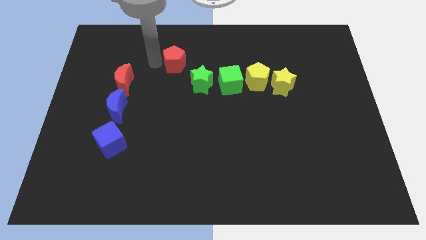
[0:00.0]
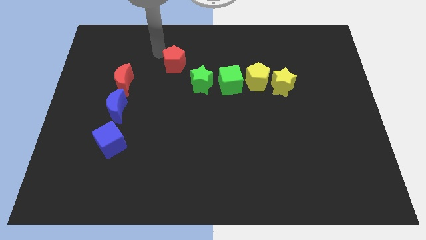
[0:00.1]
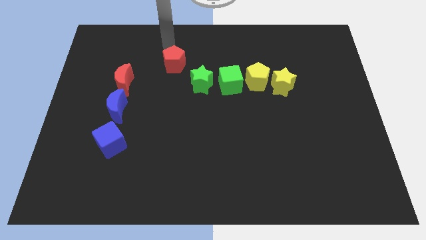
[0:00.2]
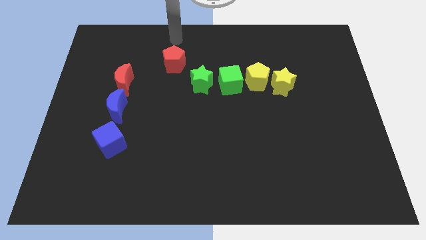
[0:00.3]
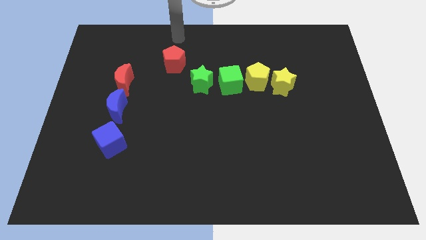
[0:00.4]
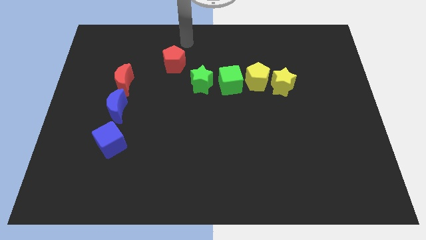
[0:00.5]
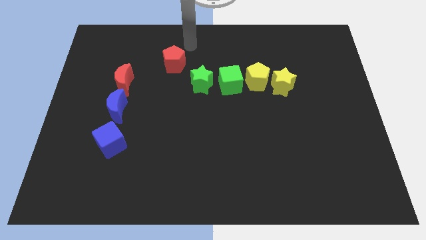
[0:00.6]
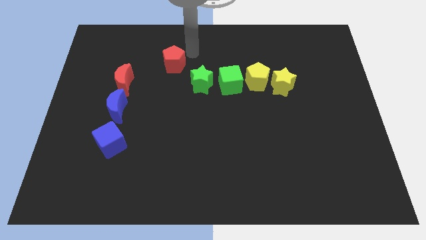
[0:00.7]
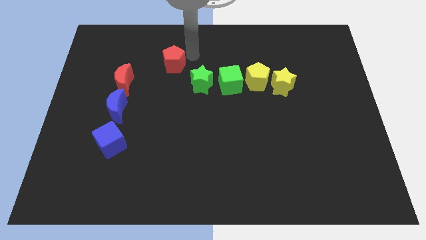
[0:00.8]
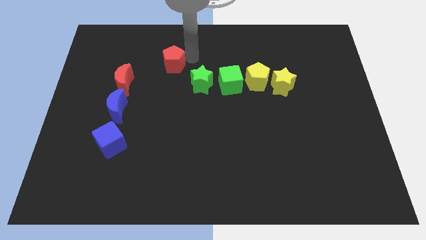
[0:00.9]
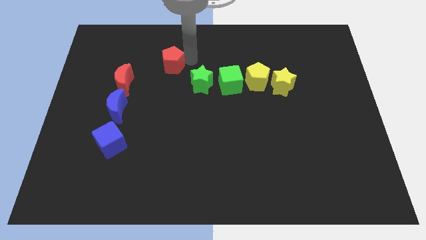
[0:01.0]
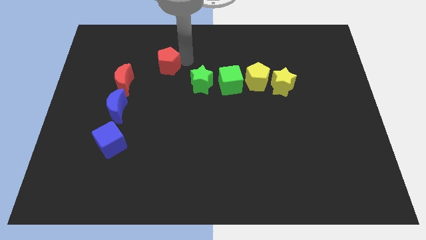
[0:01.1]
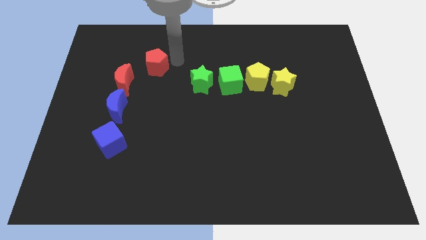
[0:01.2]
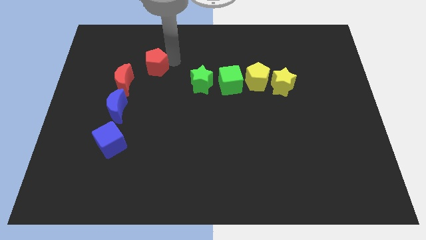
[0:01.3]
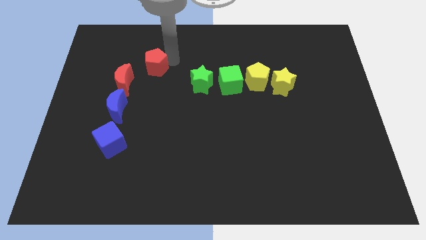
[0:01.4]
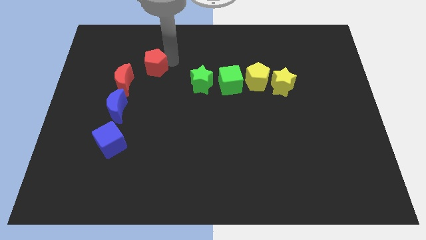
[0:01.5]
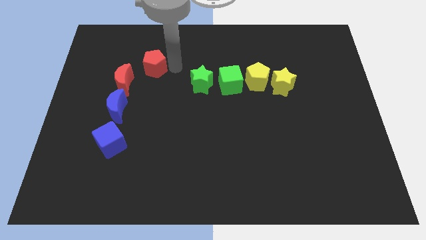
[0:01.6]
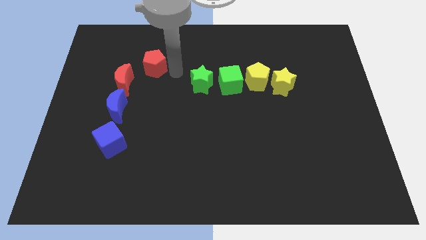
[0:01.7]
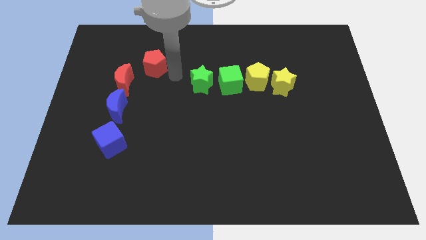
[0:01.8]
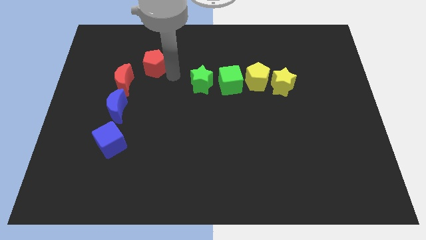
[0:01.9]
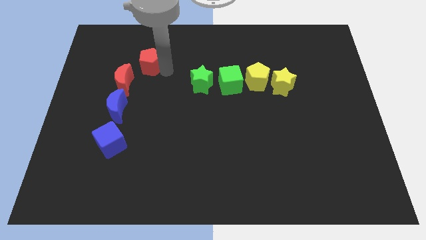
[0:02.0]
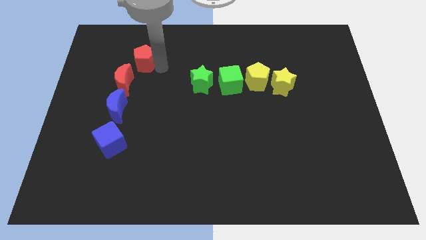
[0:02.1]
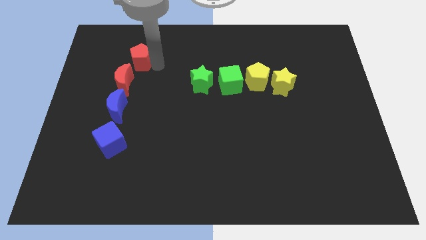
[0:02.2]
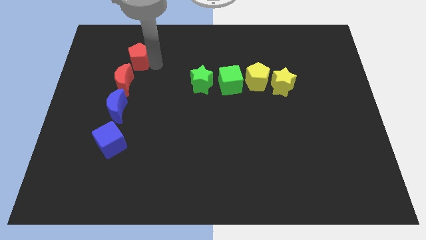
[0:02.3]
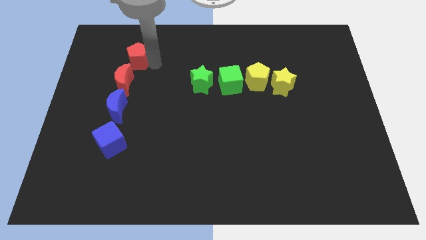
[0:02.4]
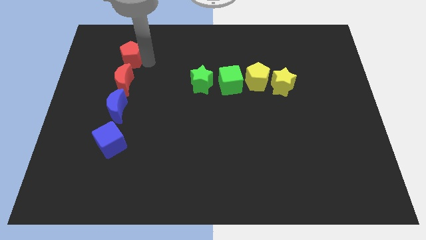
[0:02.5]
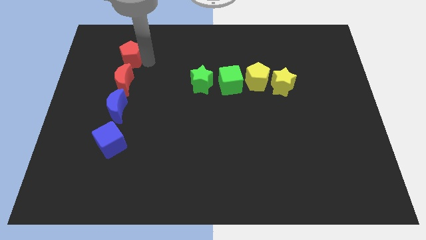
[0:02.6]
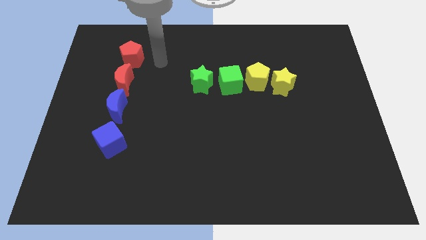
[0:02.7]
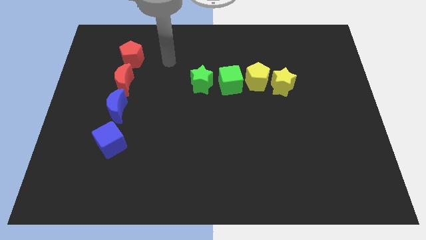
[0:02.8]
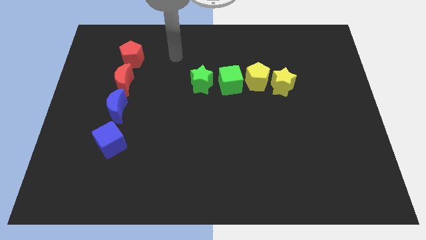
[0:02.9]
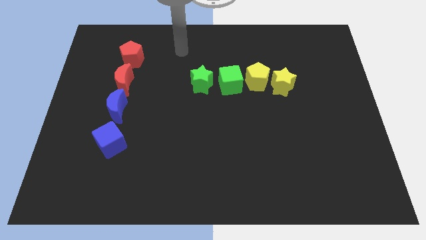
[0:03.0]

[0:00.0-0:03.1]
push the red pentagon towards the top of the red crescent

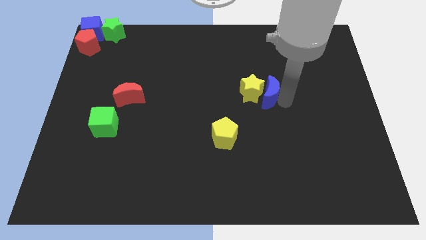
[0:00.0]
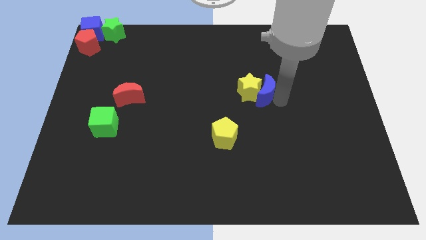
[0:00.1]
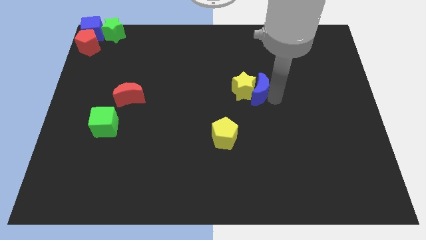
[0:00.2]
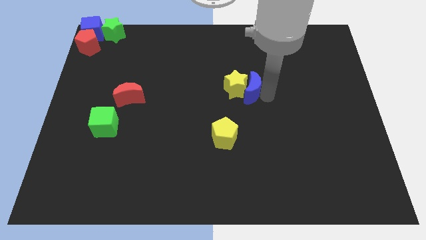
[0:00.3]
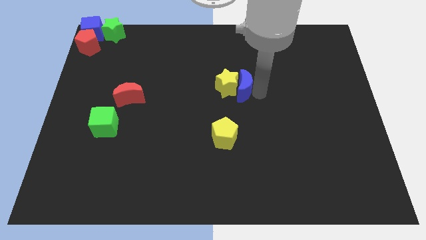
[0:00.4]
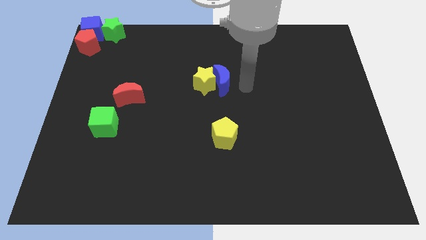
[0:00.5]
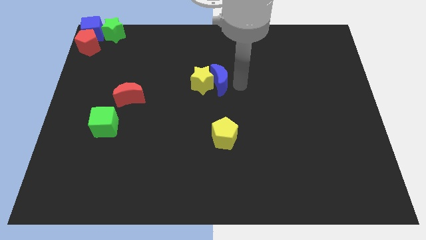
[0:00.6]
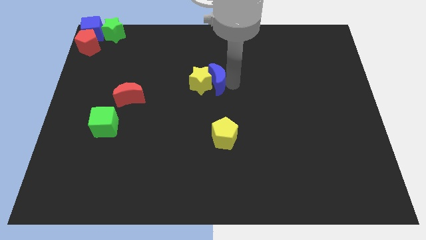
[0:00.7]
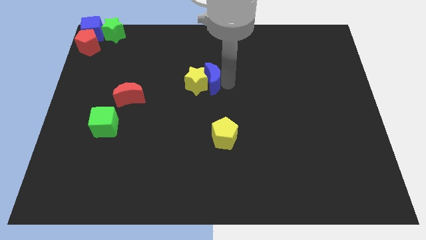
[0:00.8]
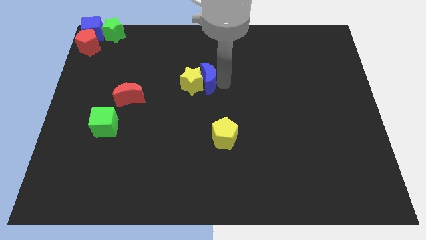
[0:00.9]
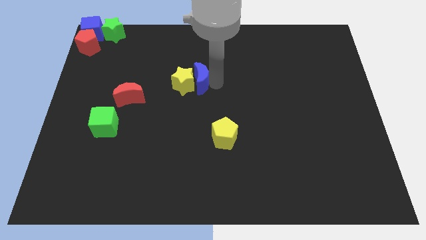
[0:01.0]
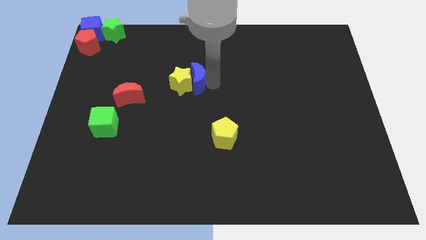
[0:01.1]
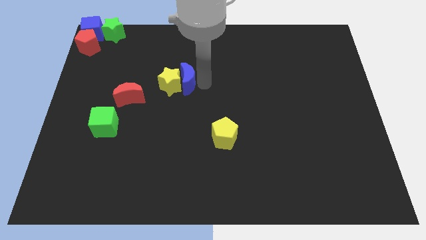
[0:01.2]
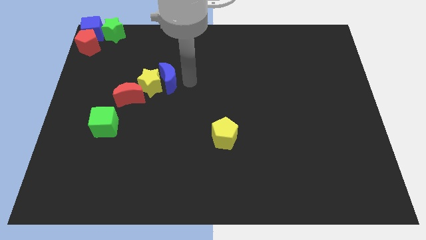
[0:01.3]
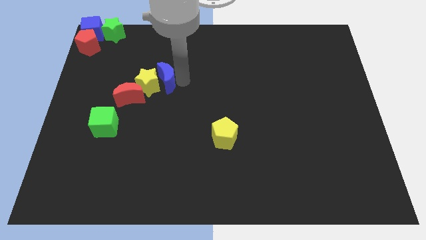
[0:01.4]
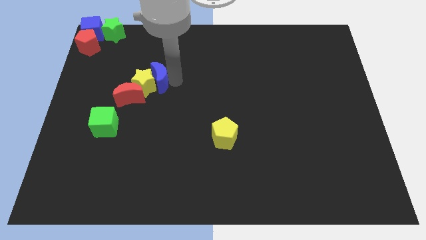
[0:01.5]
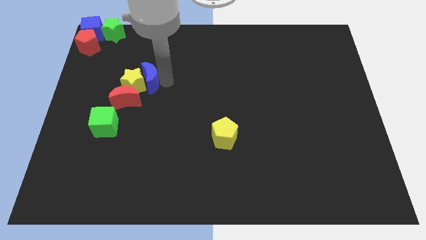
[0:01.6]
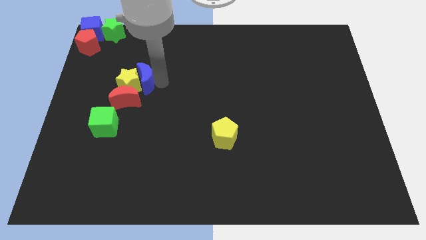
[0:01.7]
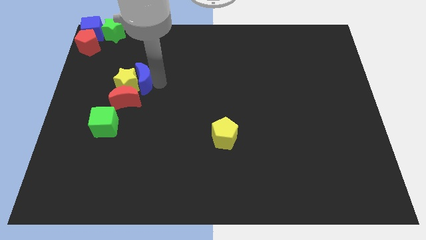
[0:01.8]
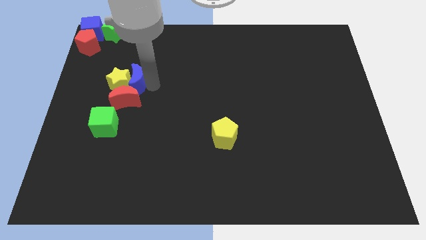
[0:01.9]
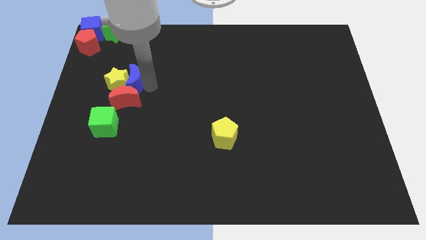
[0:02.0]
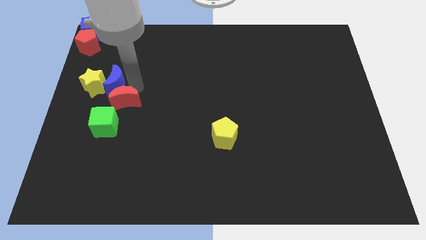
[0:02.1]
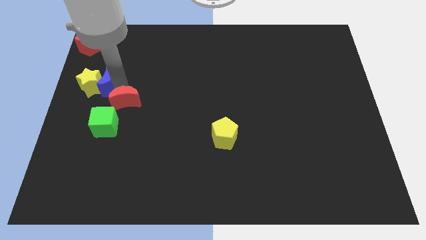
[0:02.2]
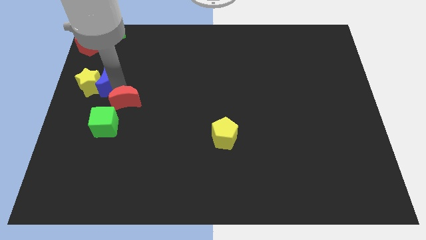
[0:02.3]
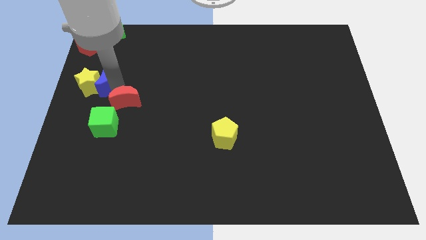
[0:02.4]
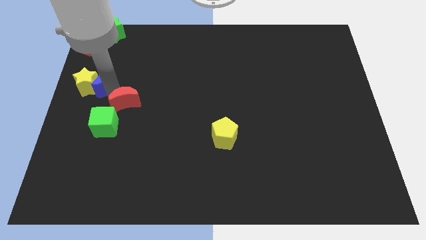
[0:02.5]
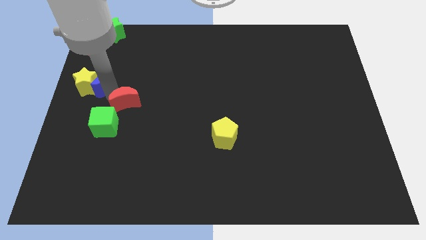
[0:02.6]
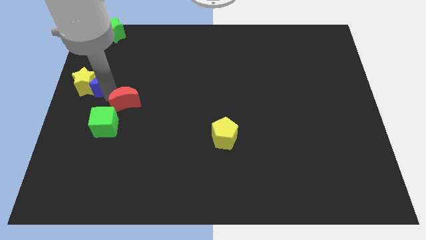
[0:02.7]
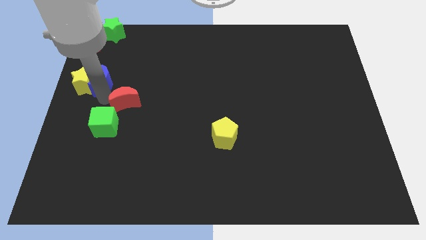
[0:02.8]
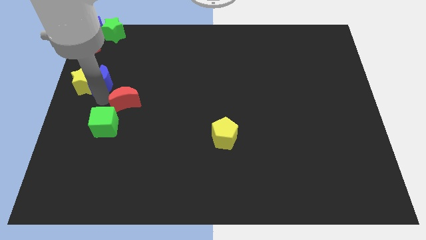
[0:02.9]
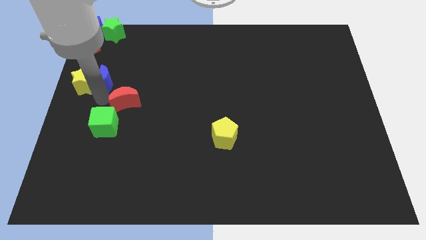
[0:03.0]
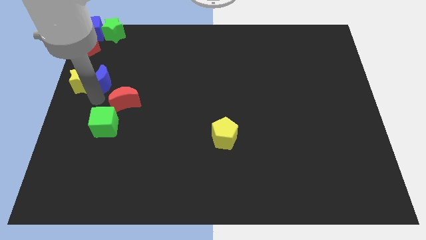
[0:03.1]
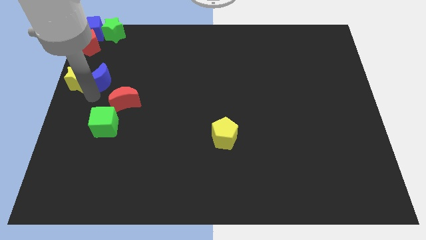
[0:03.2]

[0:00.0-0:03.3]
slide yellow star and blue moon towards the left side

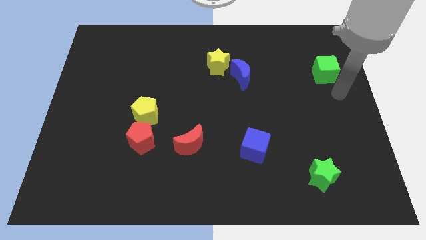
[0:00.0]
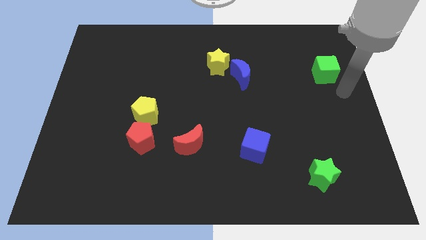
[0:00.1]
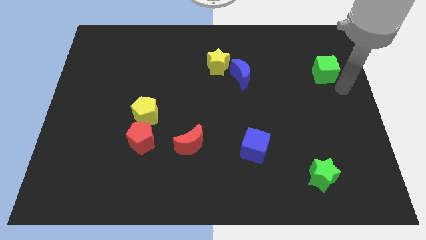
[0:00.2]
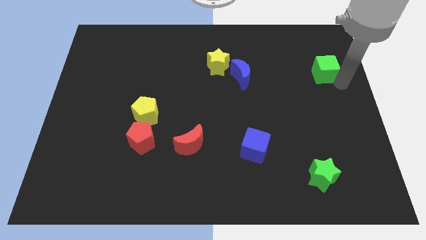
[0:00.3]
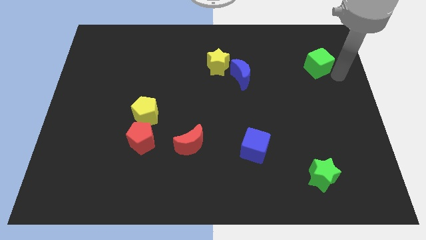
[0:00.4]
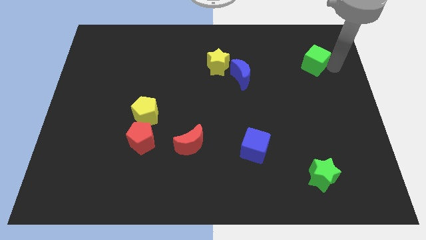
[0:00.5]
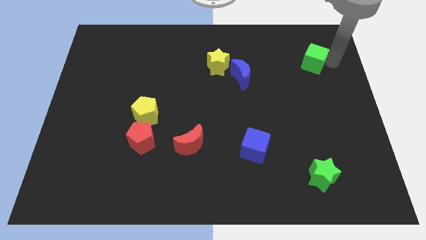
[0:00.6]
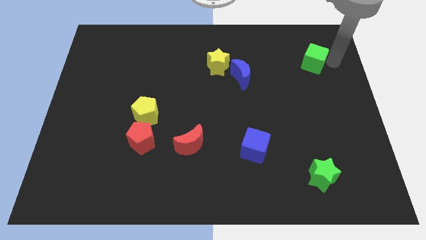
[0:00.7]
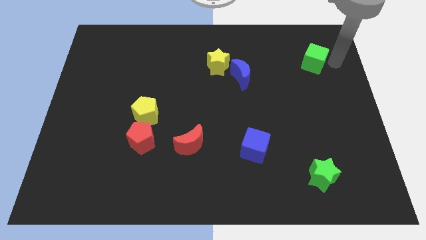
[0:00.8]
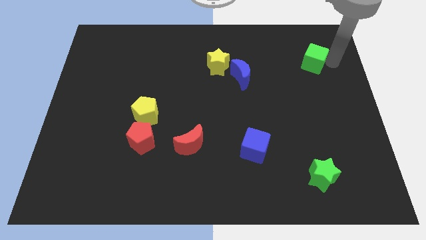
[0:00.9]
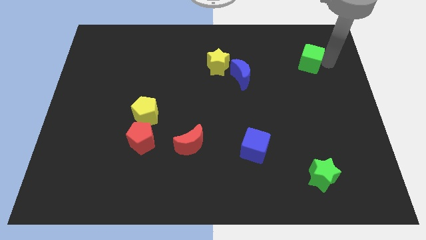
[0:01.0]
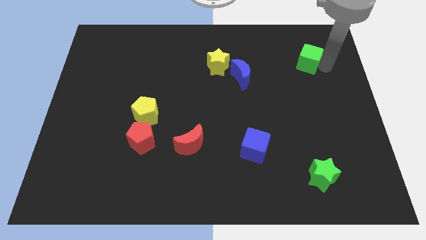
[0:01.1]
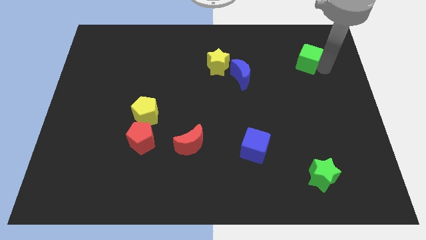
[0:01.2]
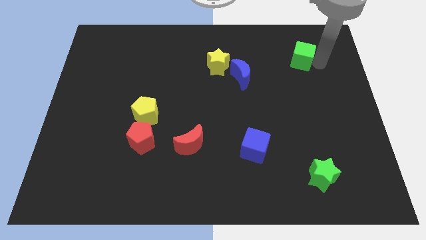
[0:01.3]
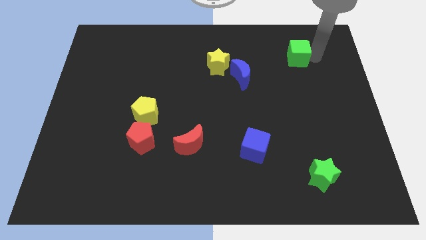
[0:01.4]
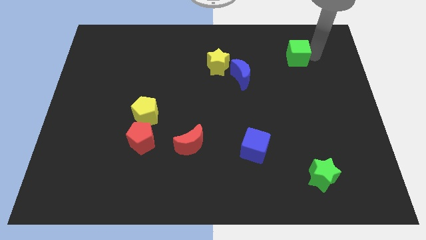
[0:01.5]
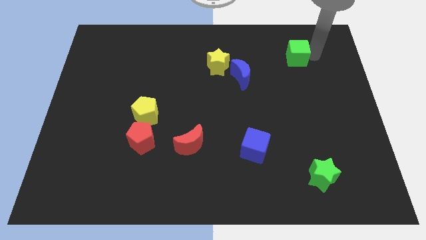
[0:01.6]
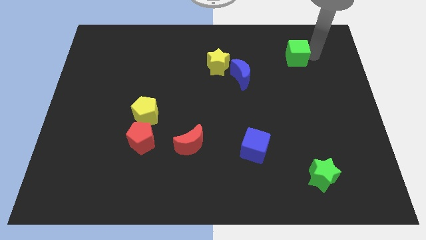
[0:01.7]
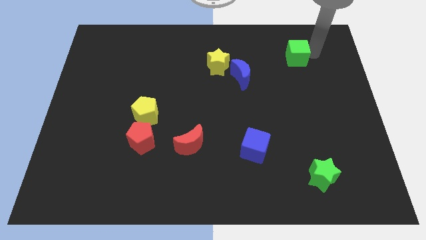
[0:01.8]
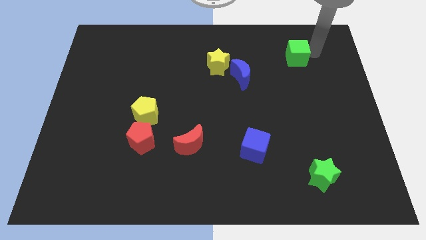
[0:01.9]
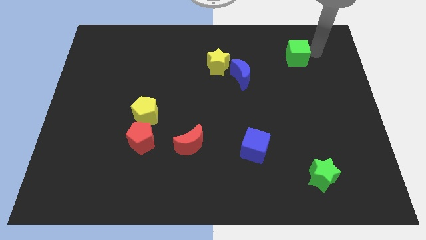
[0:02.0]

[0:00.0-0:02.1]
push green cube slightly parallel right to the blue crescent

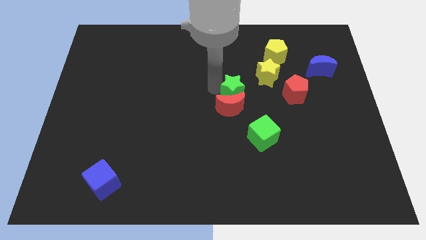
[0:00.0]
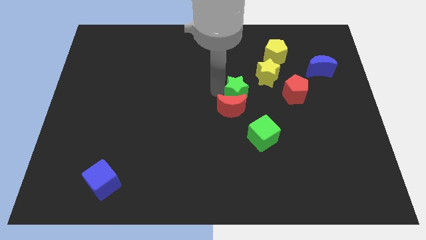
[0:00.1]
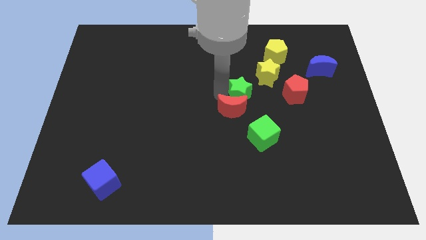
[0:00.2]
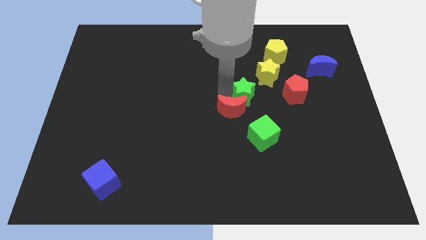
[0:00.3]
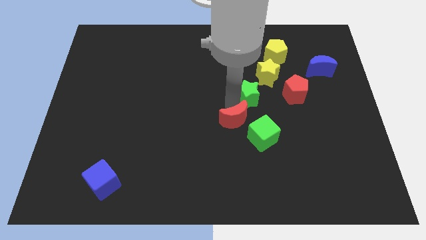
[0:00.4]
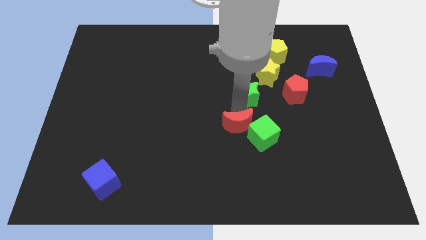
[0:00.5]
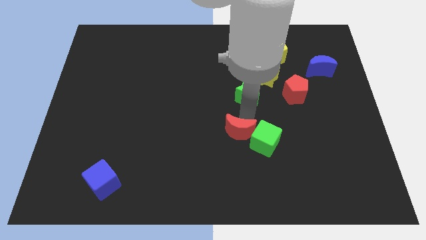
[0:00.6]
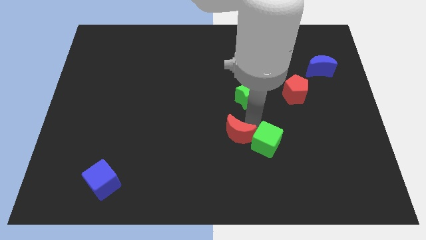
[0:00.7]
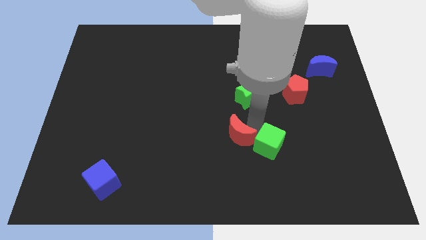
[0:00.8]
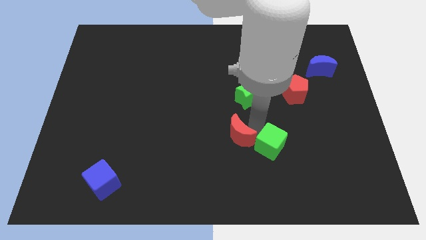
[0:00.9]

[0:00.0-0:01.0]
push the red crescent into the blue cube
